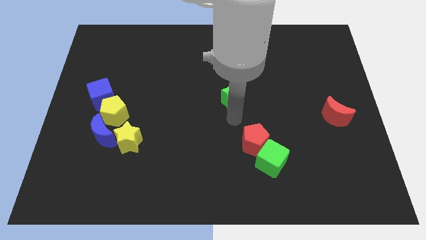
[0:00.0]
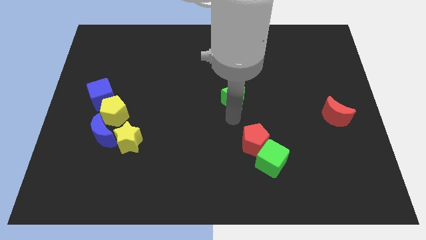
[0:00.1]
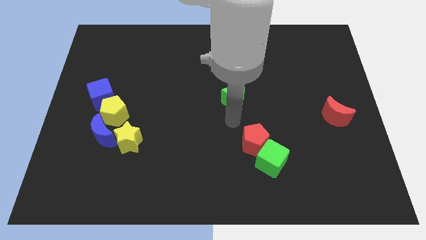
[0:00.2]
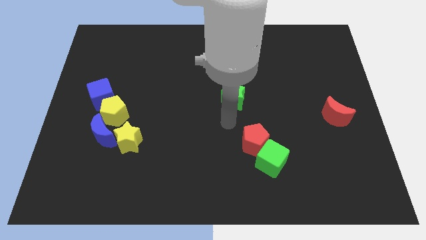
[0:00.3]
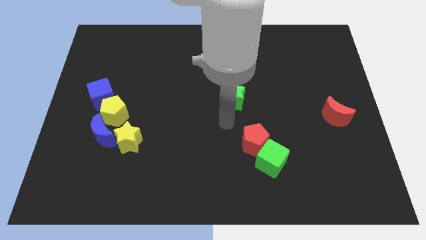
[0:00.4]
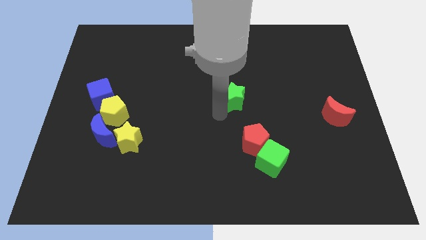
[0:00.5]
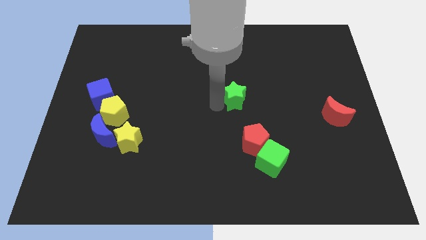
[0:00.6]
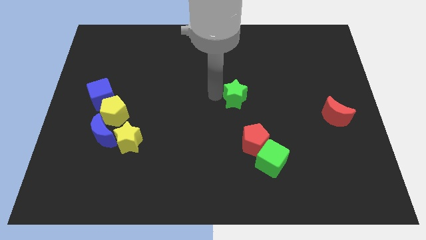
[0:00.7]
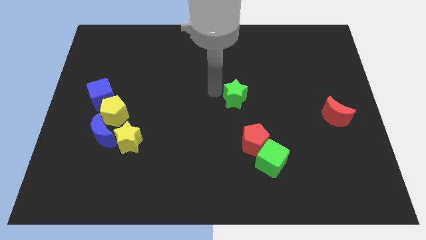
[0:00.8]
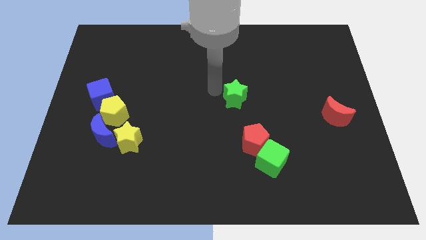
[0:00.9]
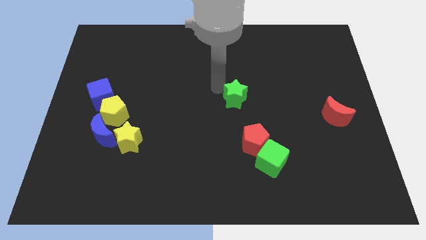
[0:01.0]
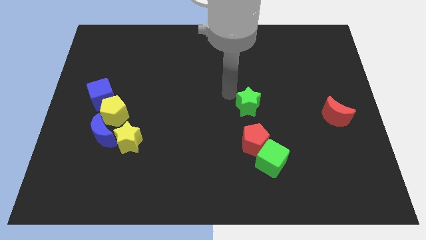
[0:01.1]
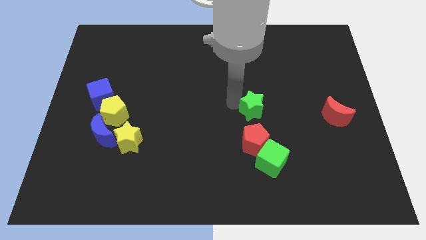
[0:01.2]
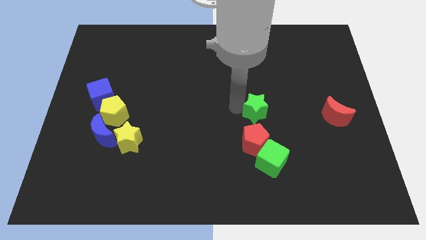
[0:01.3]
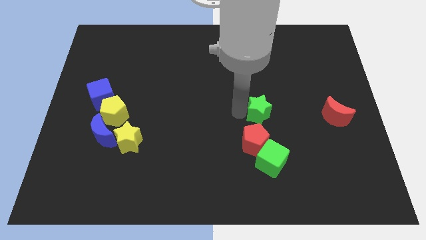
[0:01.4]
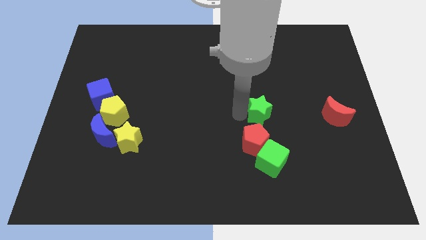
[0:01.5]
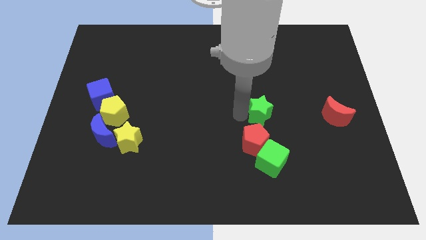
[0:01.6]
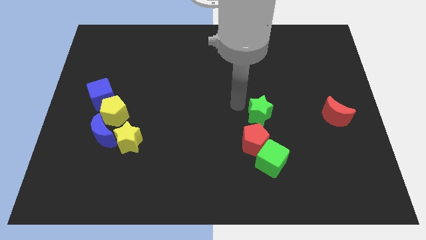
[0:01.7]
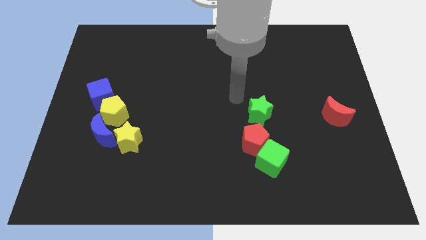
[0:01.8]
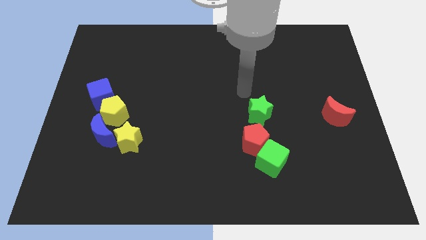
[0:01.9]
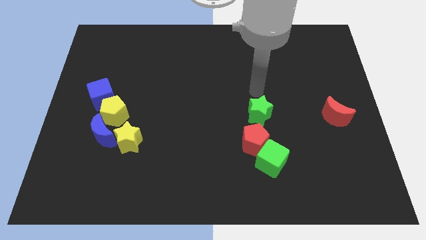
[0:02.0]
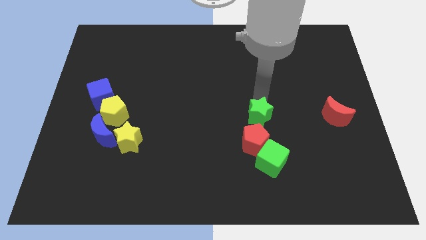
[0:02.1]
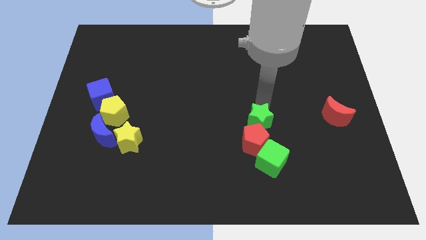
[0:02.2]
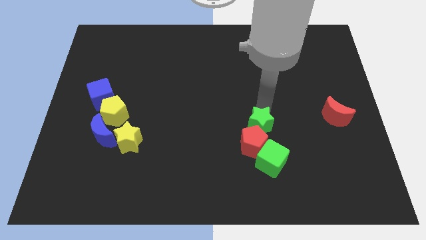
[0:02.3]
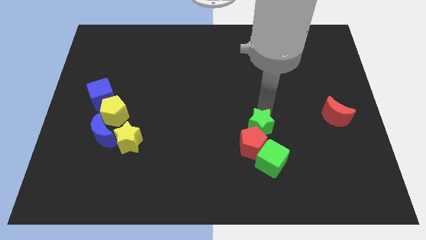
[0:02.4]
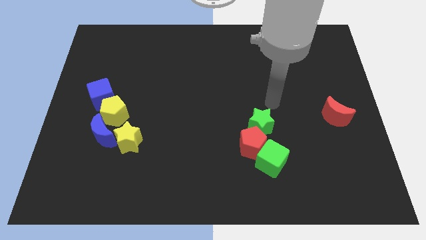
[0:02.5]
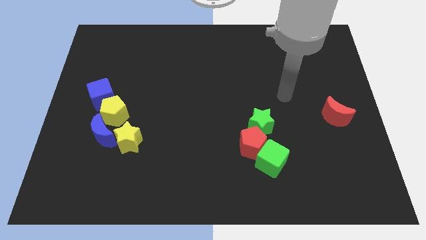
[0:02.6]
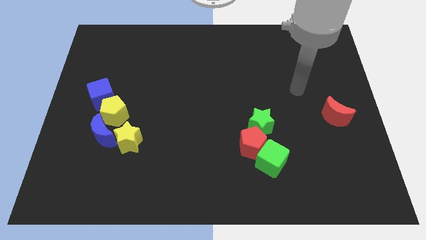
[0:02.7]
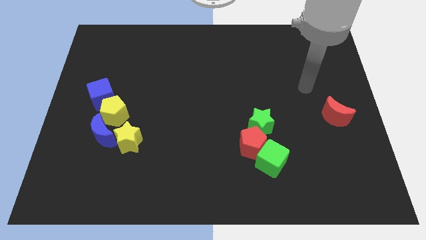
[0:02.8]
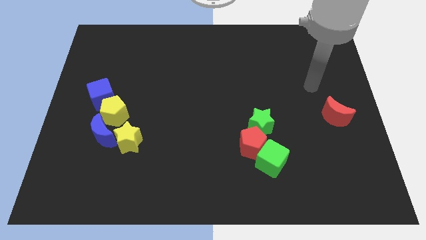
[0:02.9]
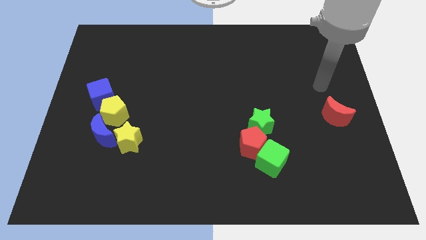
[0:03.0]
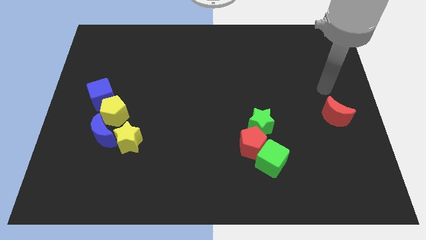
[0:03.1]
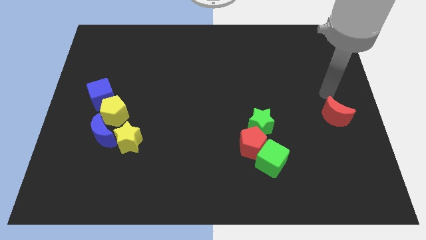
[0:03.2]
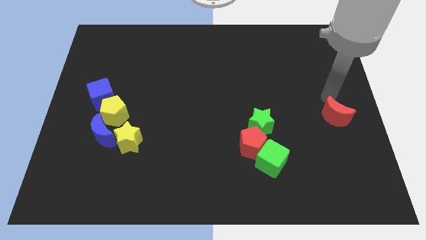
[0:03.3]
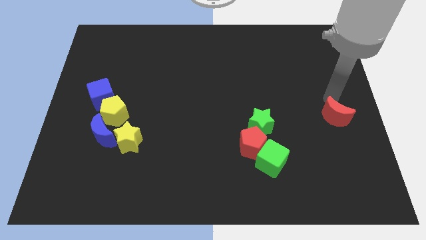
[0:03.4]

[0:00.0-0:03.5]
push the green star into the red pentagon

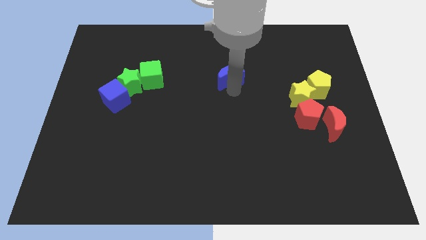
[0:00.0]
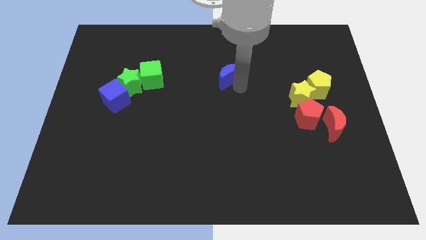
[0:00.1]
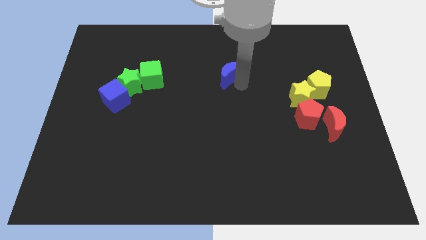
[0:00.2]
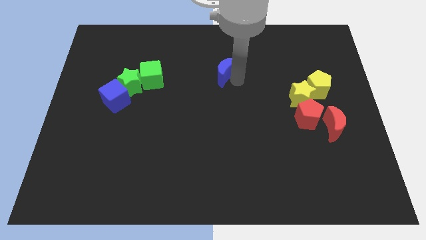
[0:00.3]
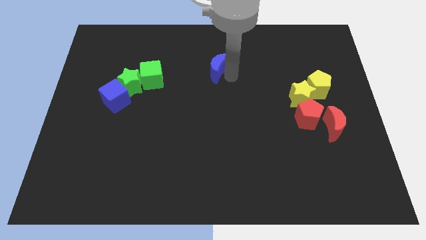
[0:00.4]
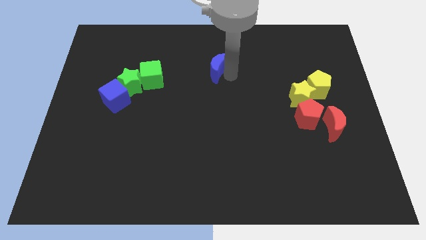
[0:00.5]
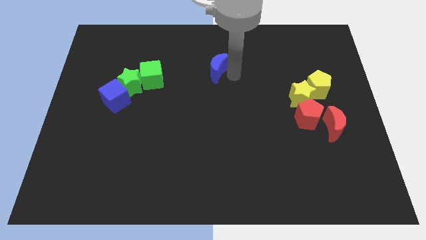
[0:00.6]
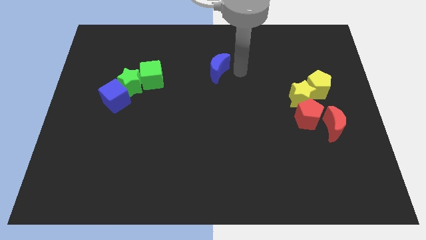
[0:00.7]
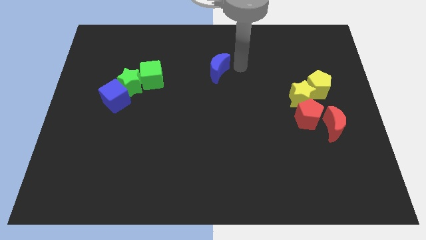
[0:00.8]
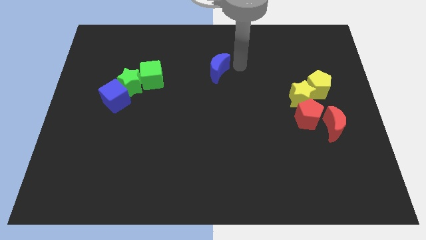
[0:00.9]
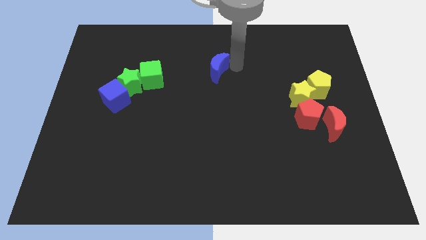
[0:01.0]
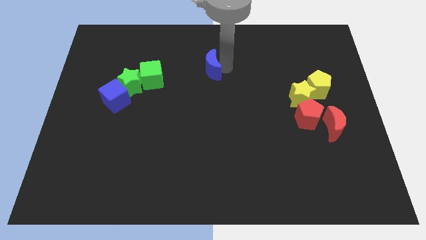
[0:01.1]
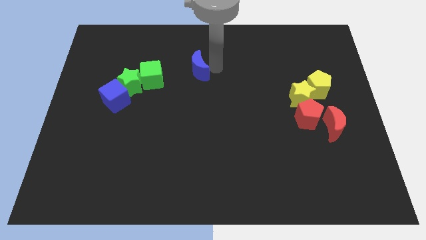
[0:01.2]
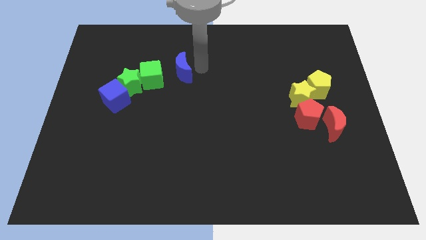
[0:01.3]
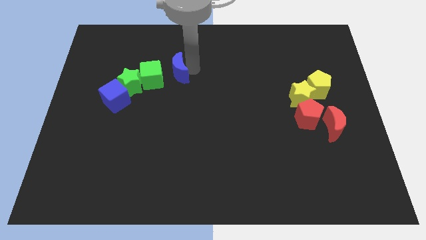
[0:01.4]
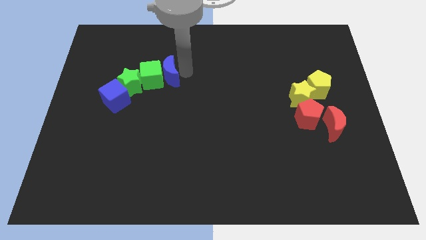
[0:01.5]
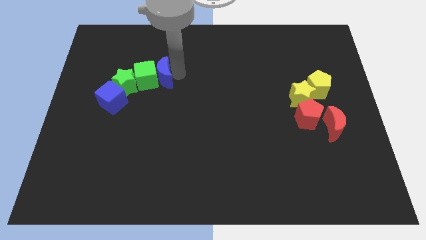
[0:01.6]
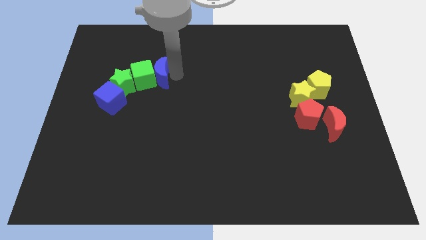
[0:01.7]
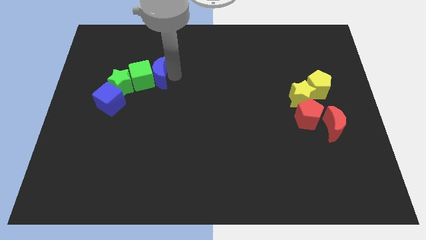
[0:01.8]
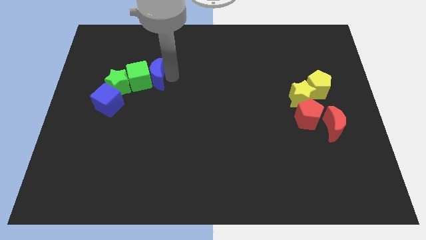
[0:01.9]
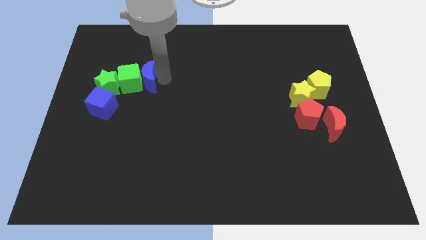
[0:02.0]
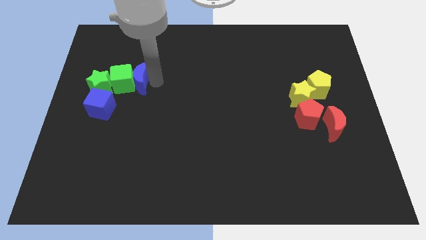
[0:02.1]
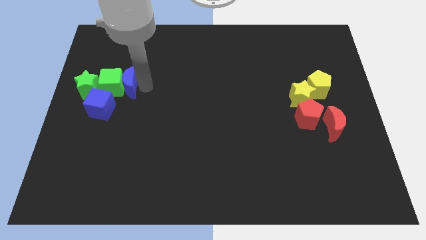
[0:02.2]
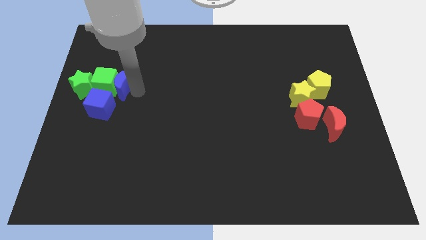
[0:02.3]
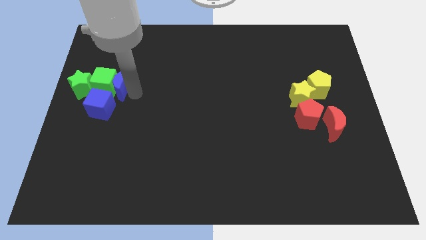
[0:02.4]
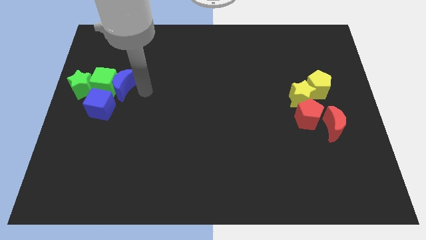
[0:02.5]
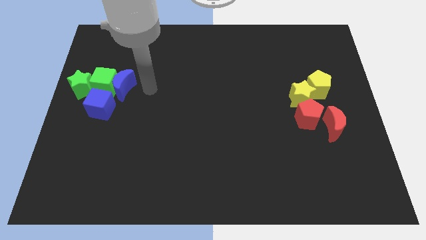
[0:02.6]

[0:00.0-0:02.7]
join the blue crescent with the group of blocks

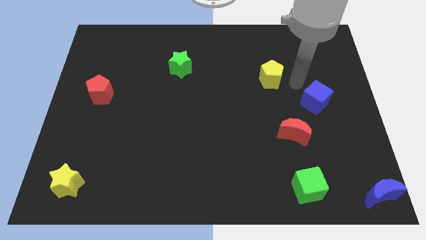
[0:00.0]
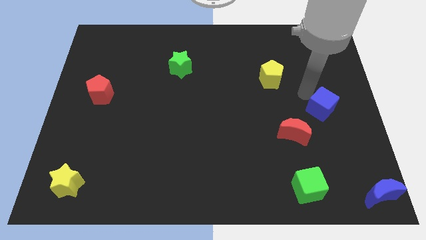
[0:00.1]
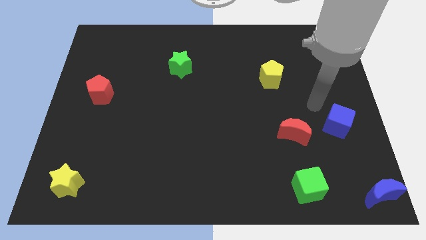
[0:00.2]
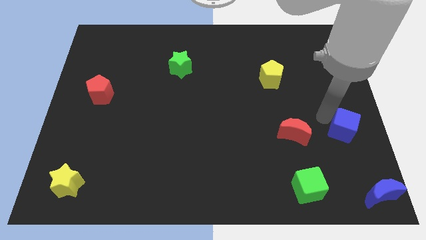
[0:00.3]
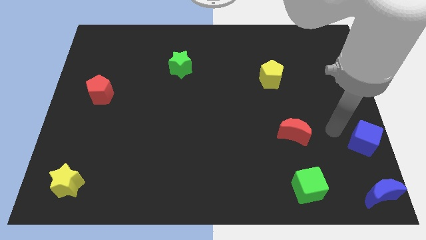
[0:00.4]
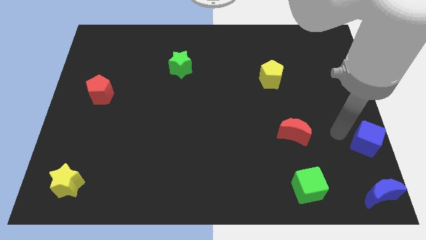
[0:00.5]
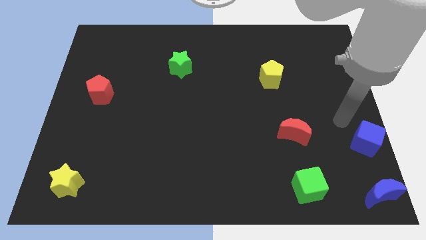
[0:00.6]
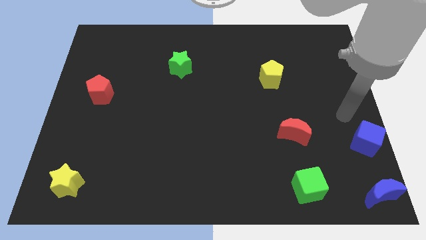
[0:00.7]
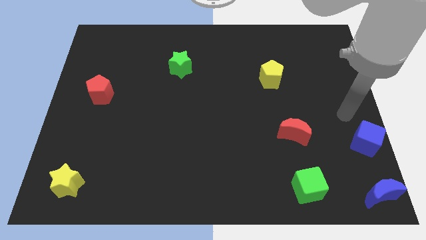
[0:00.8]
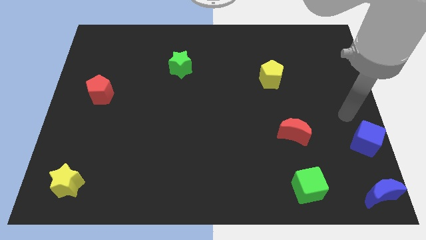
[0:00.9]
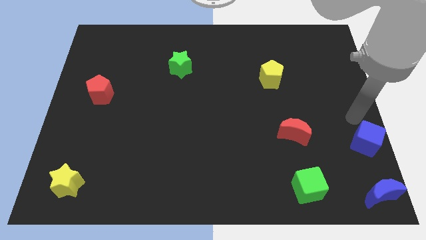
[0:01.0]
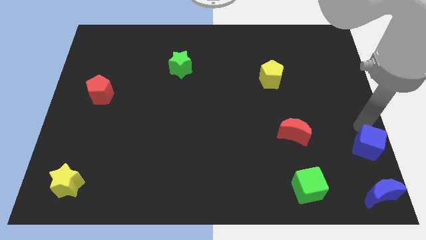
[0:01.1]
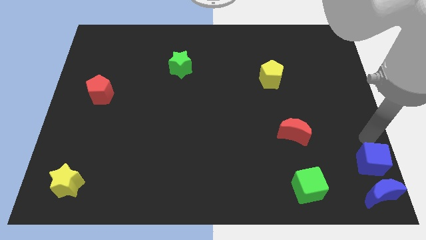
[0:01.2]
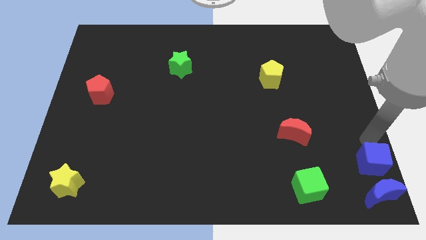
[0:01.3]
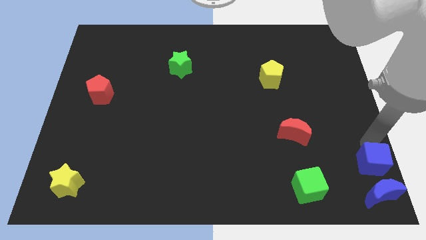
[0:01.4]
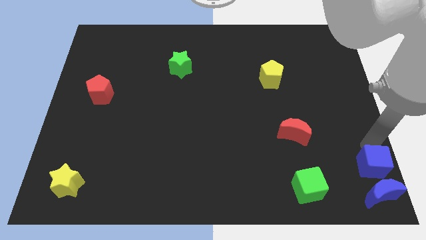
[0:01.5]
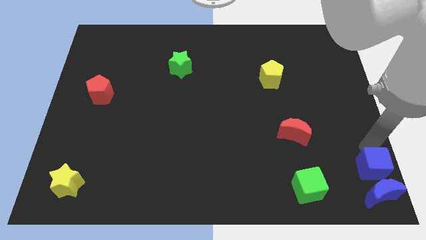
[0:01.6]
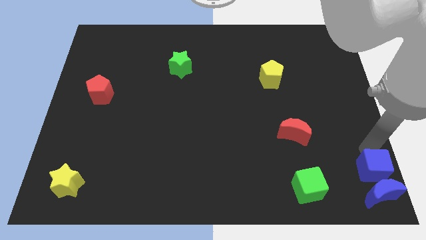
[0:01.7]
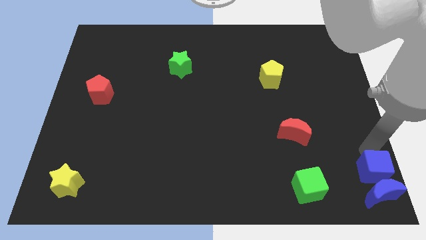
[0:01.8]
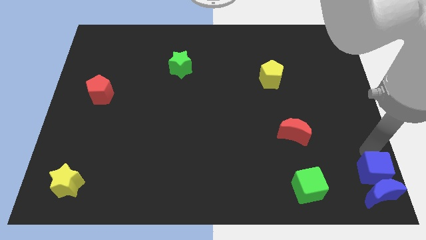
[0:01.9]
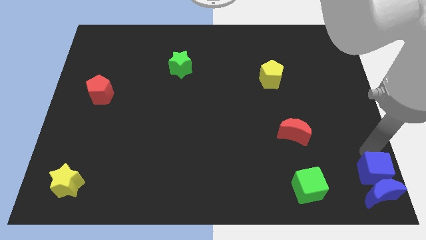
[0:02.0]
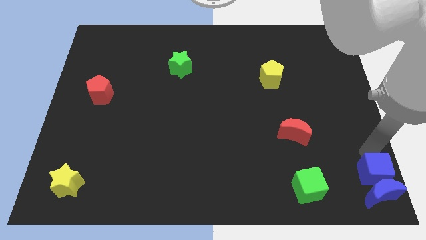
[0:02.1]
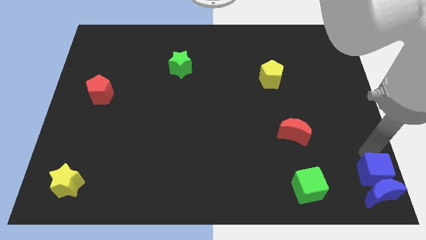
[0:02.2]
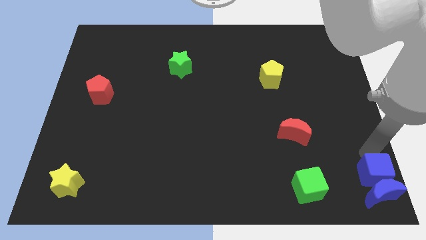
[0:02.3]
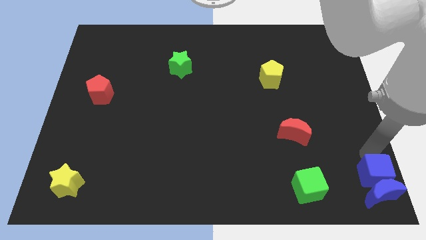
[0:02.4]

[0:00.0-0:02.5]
move blue cube into blue moon

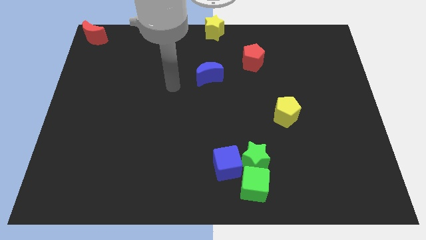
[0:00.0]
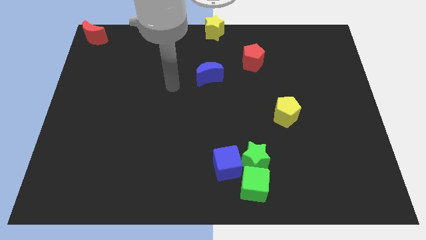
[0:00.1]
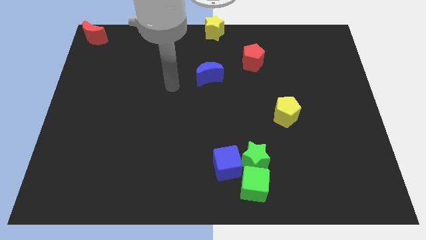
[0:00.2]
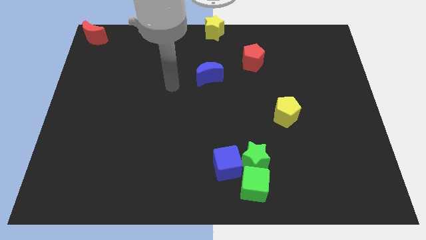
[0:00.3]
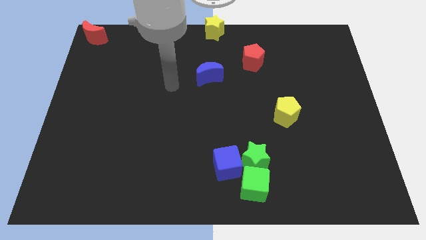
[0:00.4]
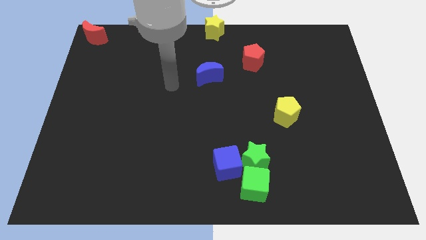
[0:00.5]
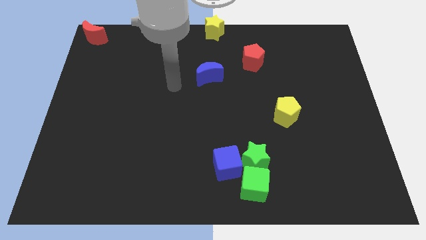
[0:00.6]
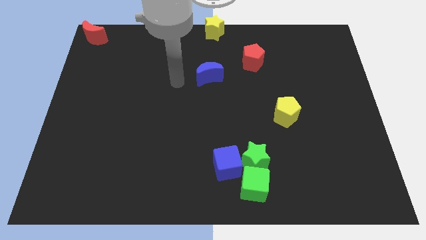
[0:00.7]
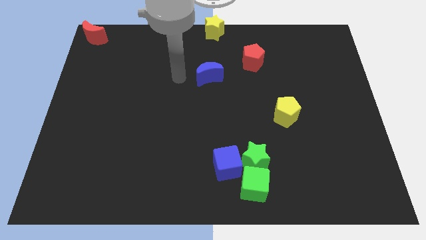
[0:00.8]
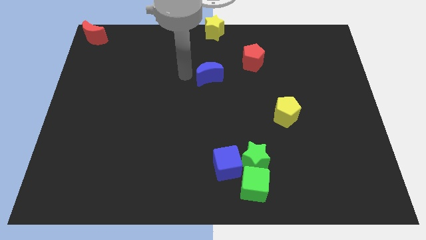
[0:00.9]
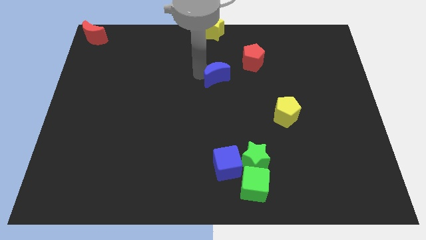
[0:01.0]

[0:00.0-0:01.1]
slide blue moon towards red pentagon
